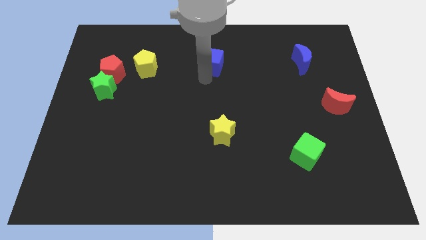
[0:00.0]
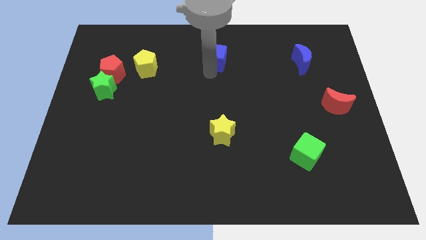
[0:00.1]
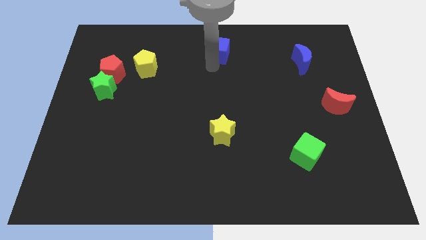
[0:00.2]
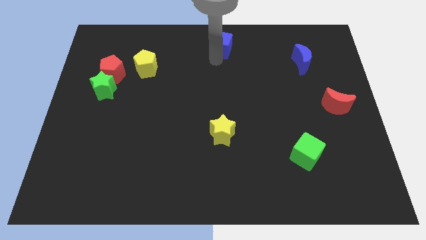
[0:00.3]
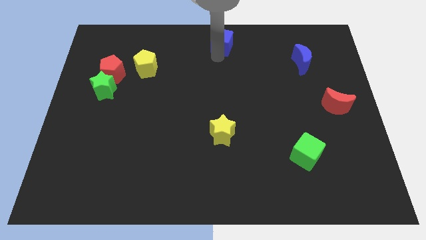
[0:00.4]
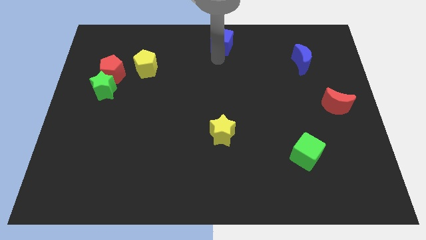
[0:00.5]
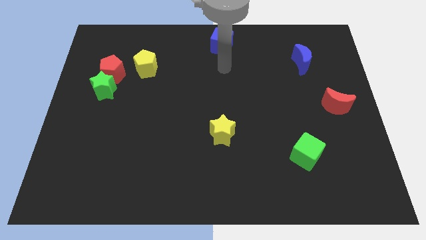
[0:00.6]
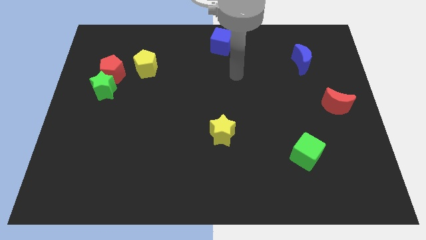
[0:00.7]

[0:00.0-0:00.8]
push blue cube slightly towards up

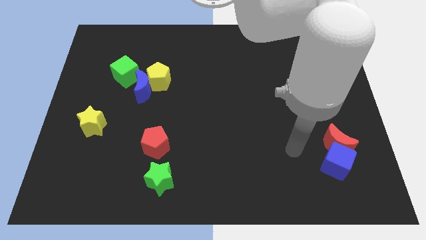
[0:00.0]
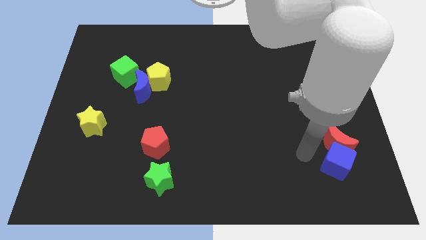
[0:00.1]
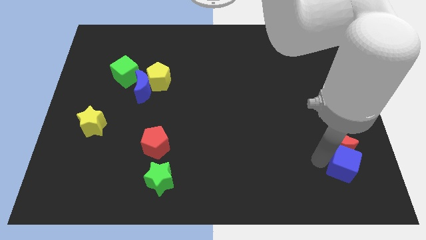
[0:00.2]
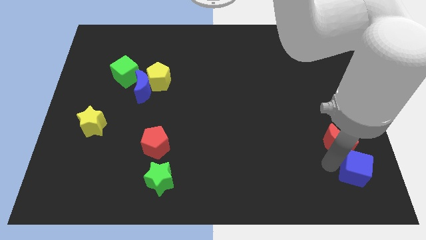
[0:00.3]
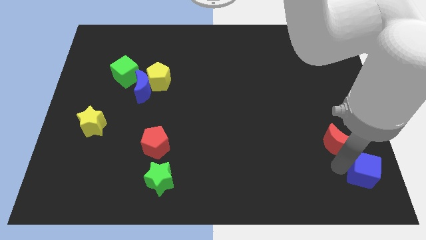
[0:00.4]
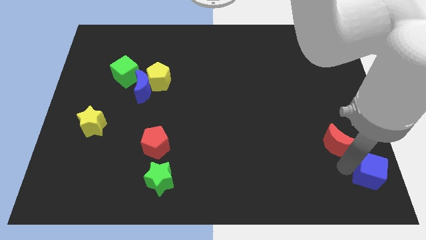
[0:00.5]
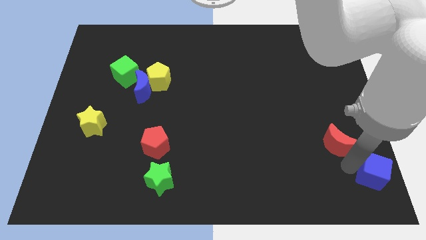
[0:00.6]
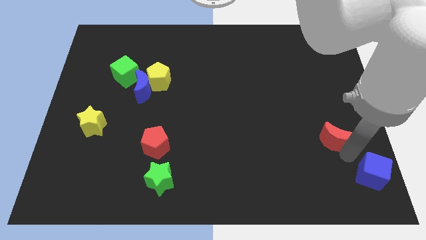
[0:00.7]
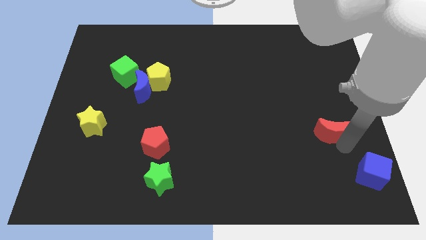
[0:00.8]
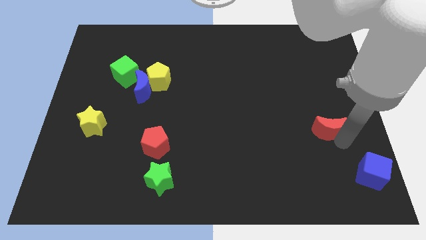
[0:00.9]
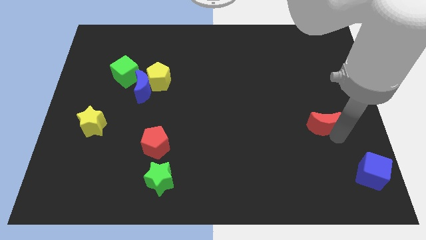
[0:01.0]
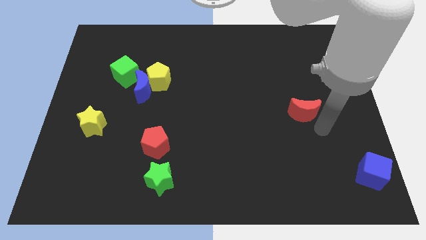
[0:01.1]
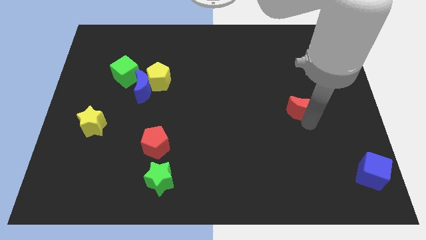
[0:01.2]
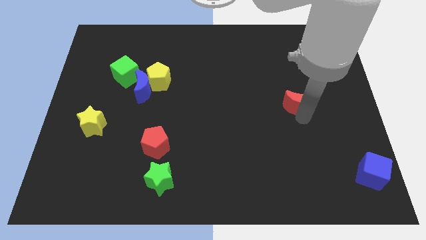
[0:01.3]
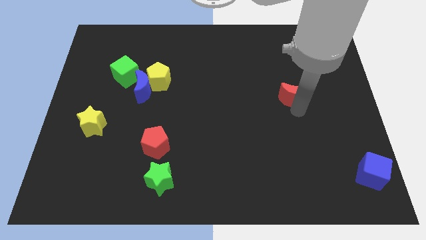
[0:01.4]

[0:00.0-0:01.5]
separate blue cube and red crescent

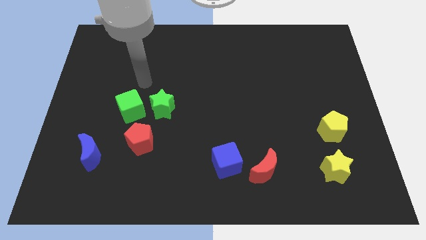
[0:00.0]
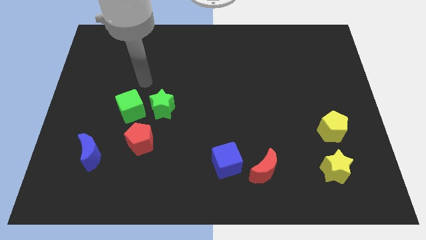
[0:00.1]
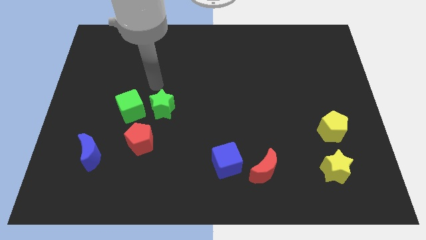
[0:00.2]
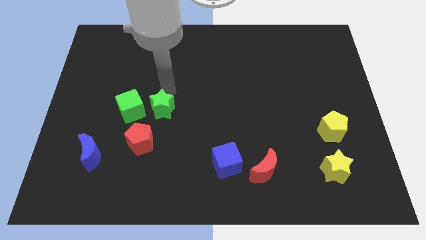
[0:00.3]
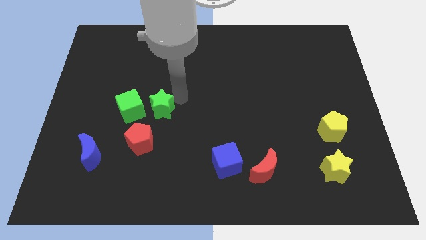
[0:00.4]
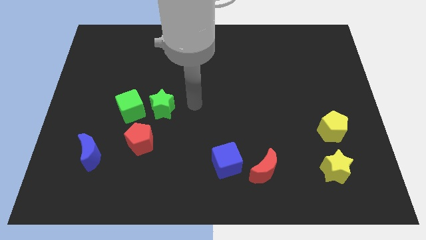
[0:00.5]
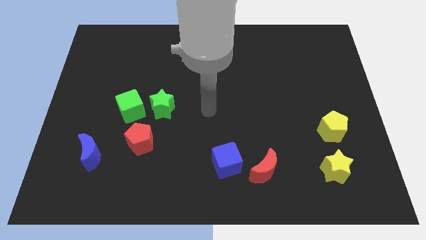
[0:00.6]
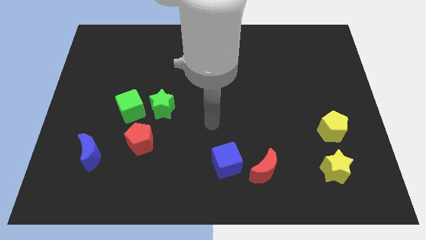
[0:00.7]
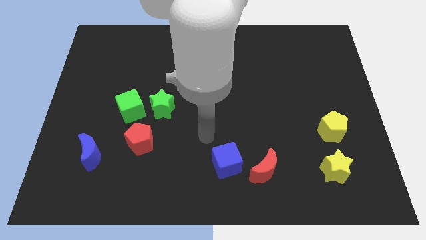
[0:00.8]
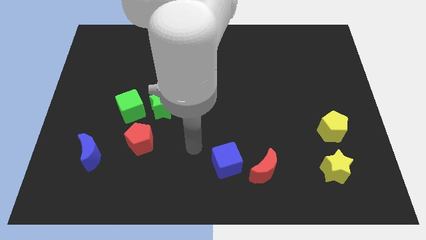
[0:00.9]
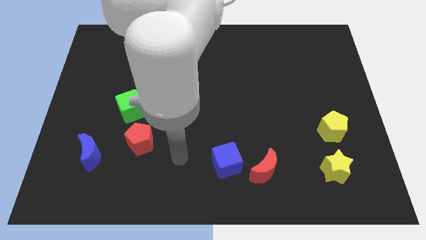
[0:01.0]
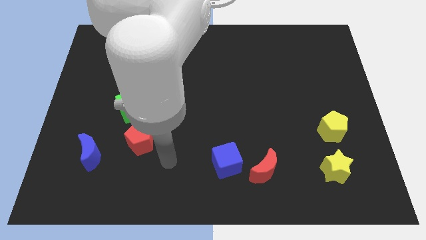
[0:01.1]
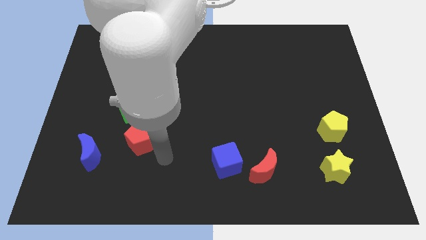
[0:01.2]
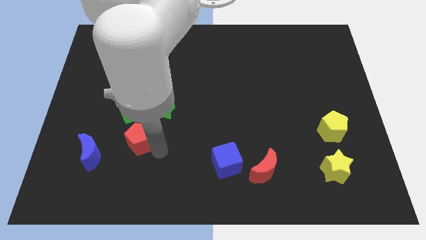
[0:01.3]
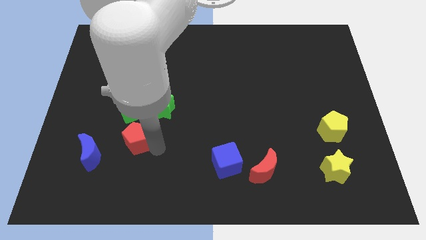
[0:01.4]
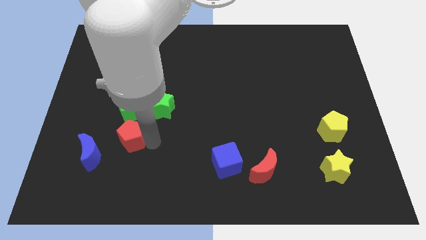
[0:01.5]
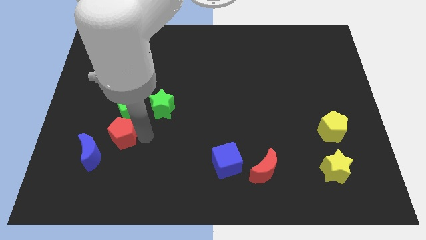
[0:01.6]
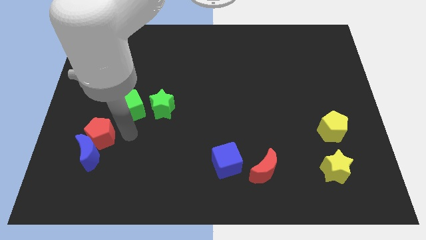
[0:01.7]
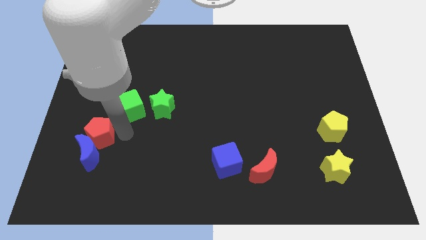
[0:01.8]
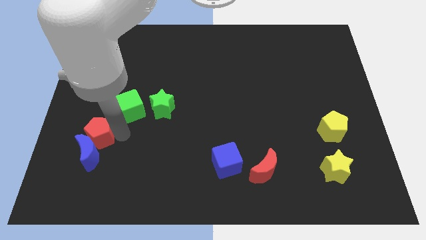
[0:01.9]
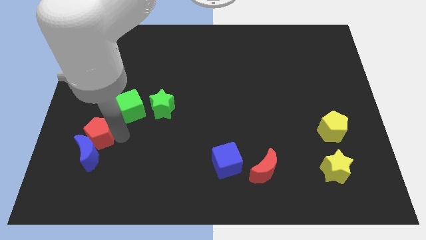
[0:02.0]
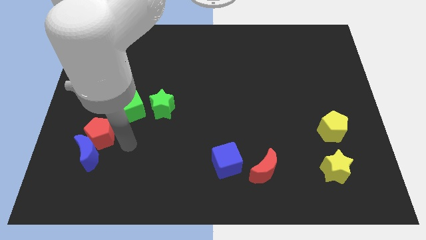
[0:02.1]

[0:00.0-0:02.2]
push the red pentagon close to the blue crescent

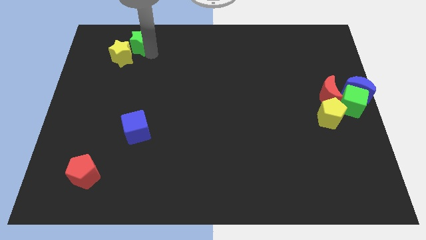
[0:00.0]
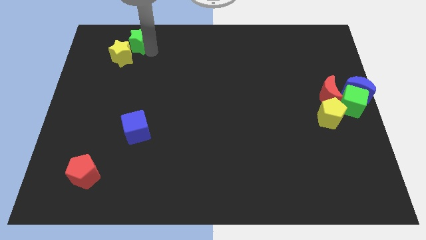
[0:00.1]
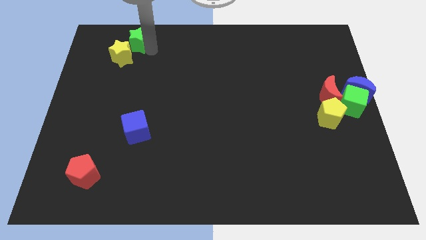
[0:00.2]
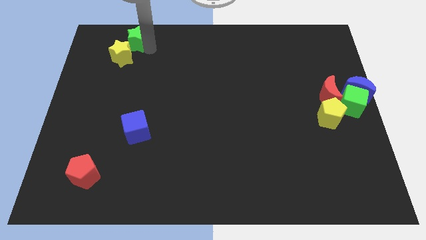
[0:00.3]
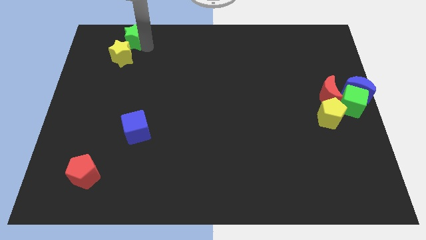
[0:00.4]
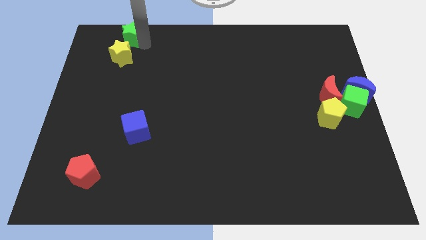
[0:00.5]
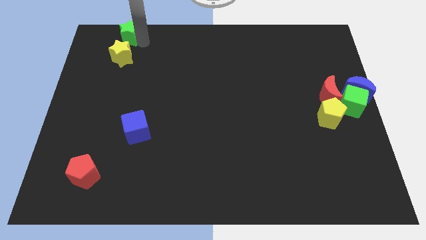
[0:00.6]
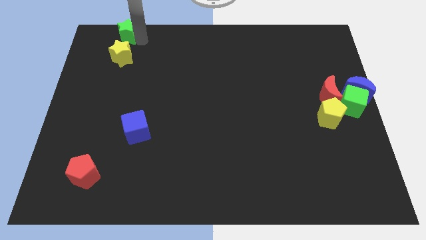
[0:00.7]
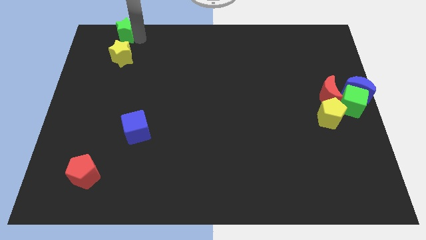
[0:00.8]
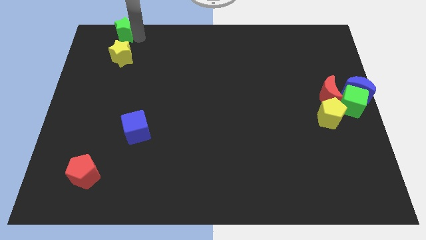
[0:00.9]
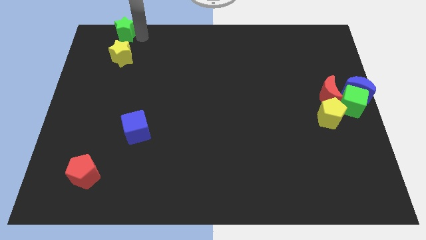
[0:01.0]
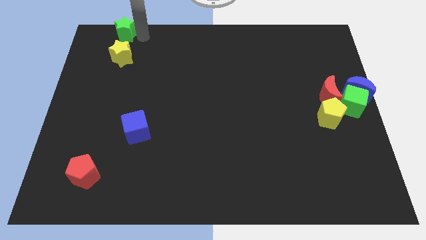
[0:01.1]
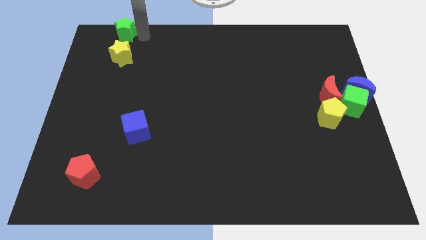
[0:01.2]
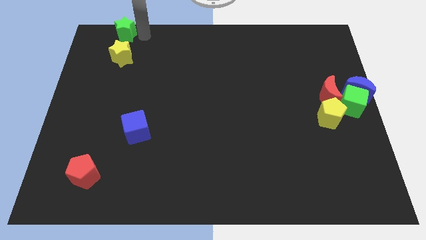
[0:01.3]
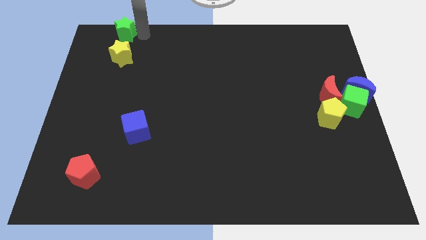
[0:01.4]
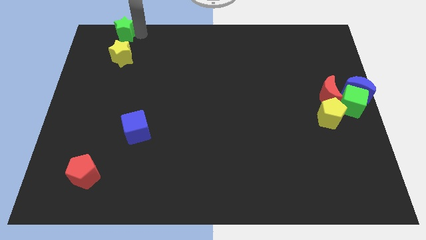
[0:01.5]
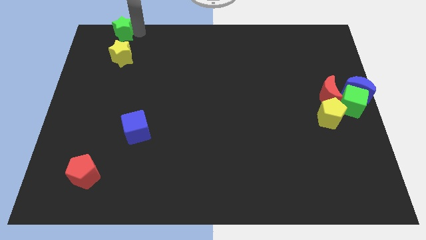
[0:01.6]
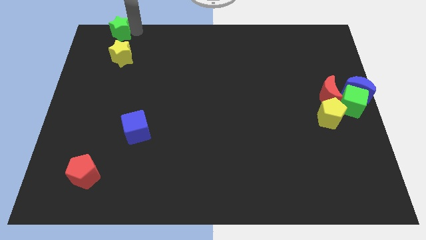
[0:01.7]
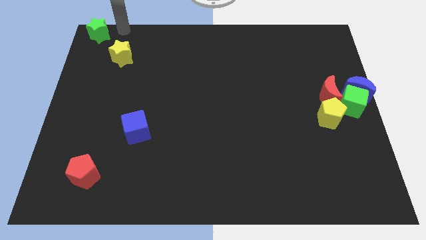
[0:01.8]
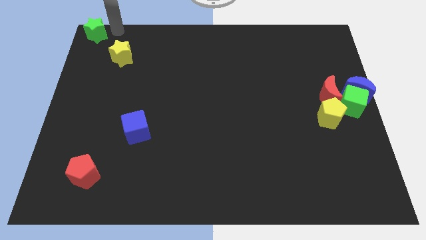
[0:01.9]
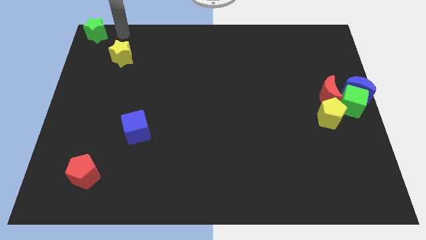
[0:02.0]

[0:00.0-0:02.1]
slide the green star to top left corner

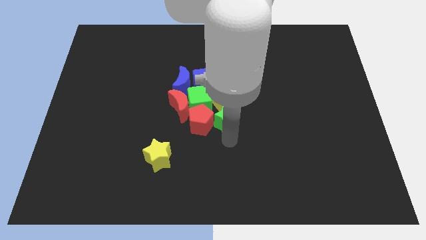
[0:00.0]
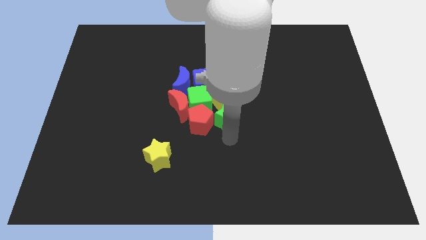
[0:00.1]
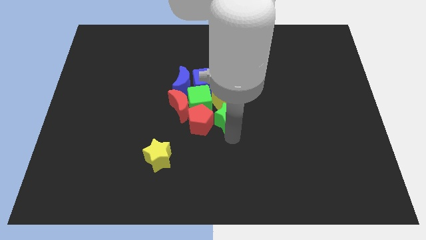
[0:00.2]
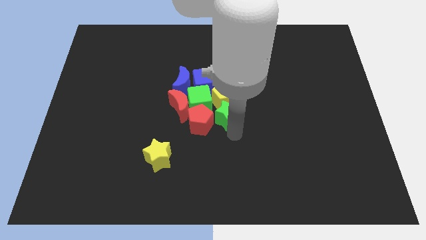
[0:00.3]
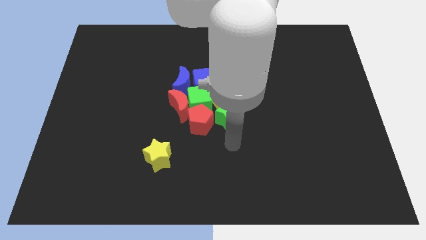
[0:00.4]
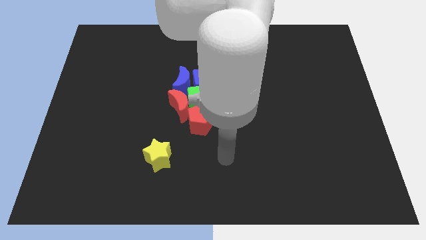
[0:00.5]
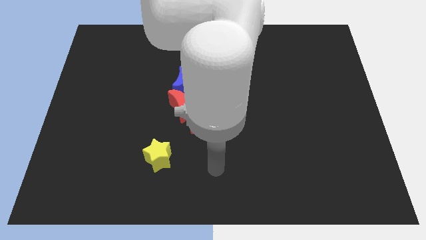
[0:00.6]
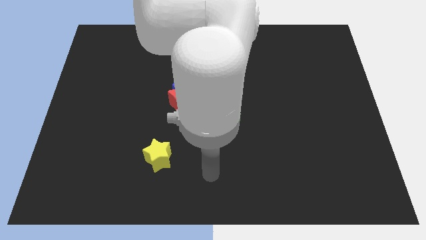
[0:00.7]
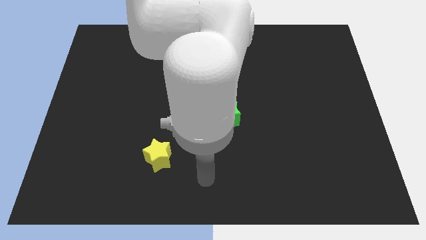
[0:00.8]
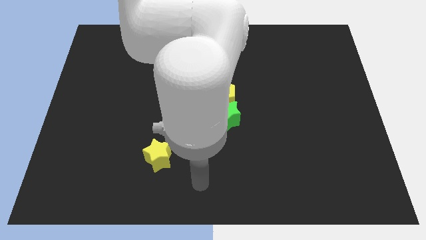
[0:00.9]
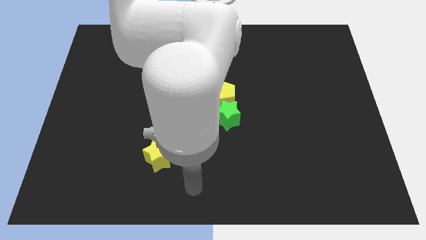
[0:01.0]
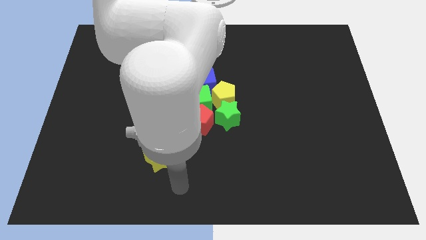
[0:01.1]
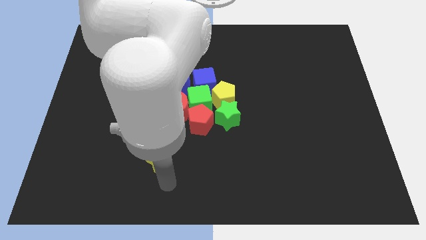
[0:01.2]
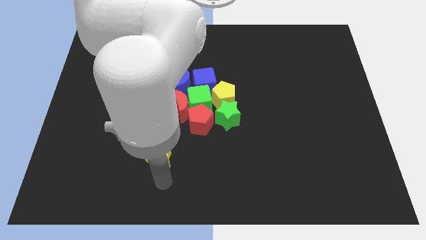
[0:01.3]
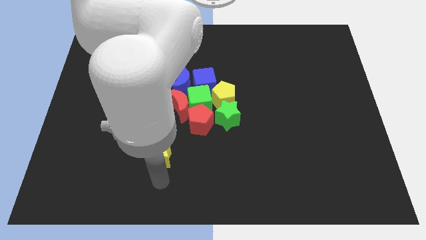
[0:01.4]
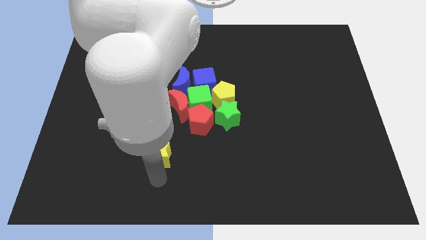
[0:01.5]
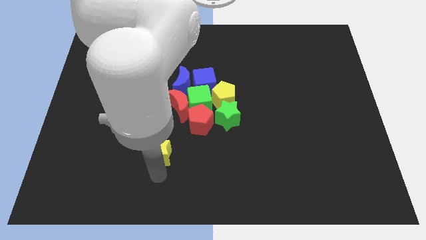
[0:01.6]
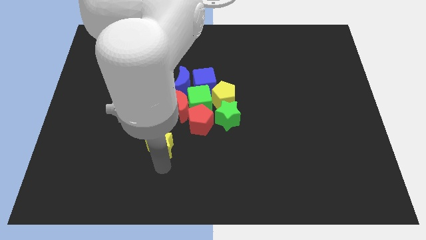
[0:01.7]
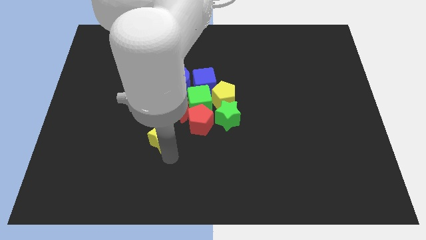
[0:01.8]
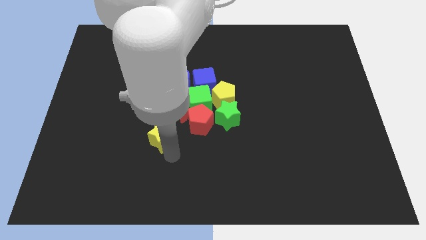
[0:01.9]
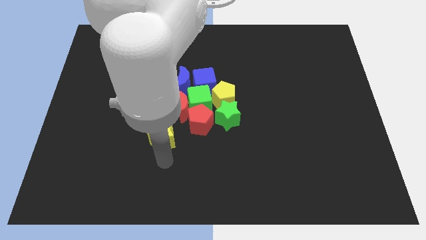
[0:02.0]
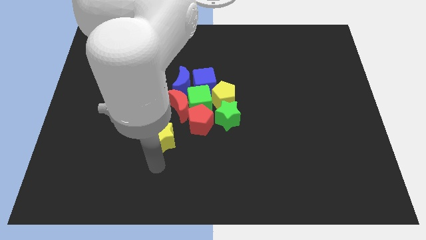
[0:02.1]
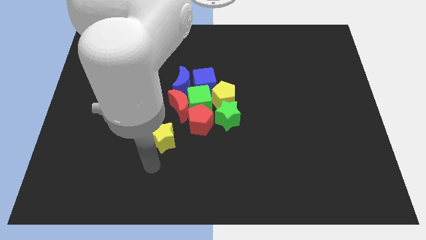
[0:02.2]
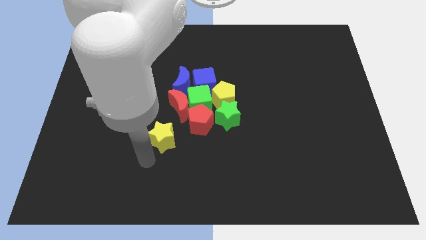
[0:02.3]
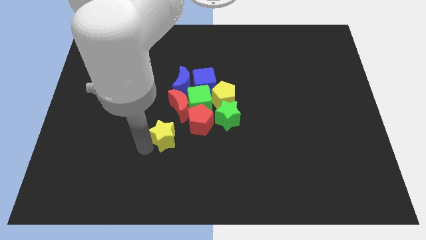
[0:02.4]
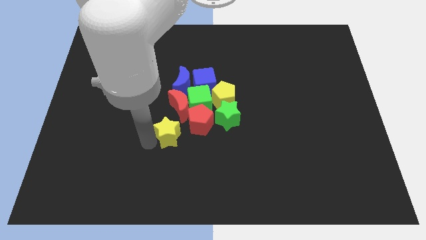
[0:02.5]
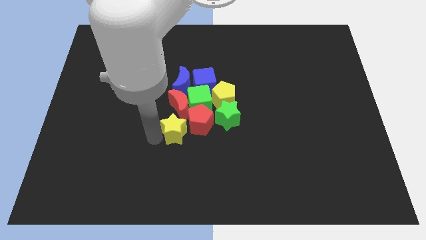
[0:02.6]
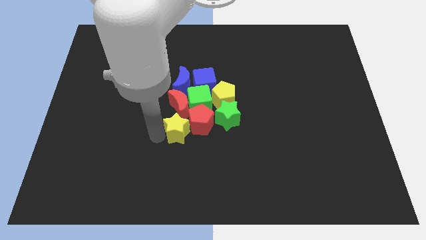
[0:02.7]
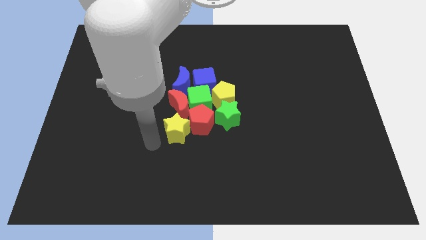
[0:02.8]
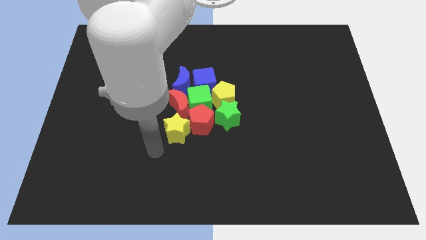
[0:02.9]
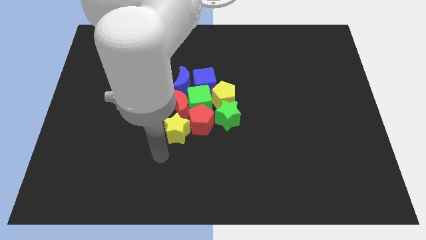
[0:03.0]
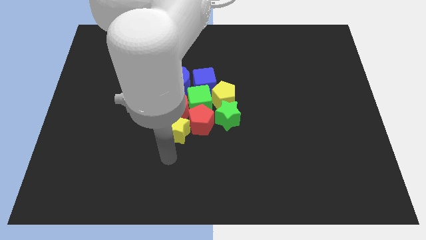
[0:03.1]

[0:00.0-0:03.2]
place yellow star to the left of red pentagon
